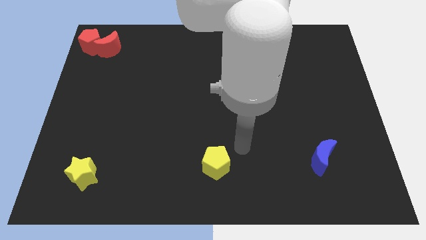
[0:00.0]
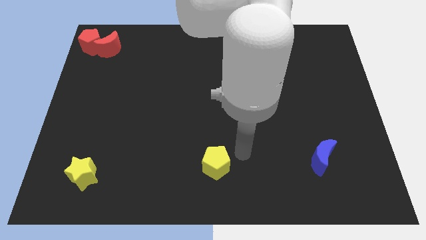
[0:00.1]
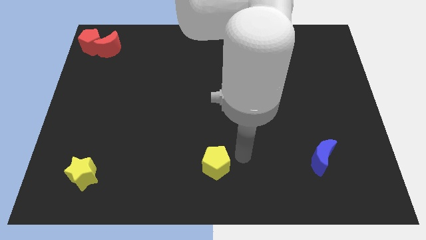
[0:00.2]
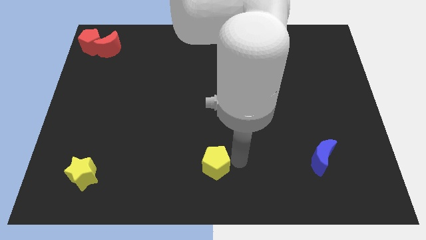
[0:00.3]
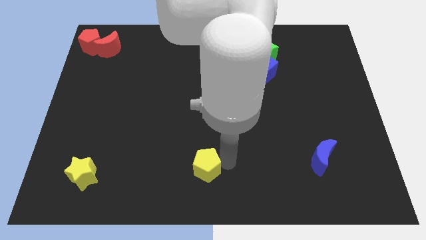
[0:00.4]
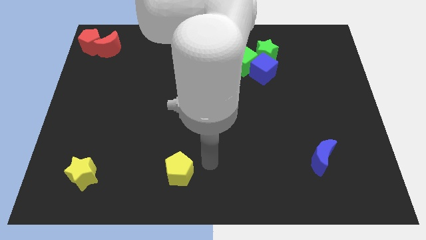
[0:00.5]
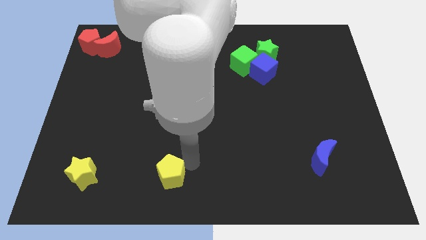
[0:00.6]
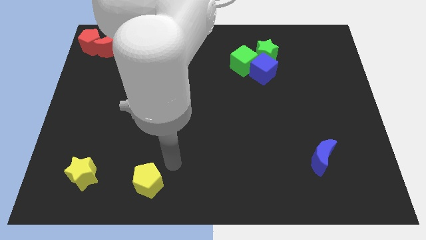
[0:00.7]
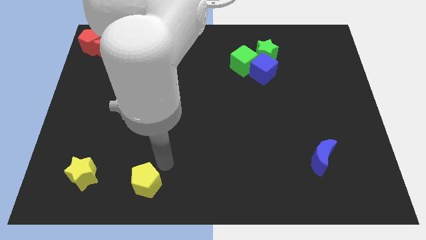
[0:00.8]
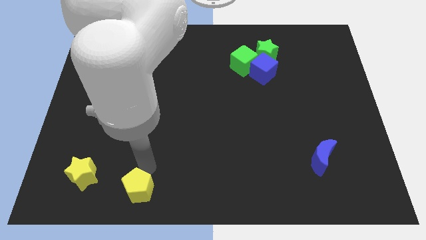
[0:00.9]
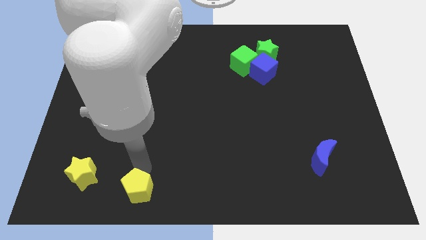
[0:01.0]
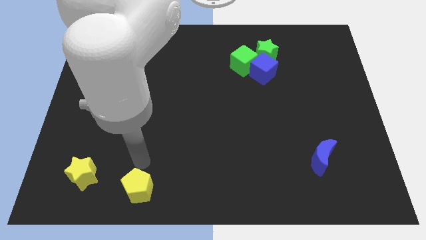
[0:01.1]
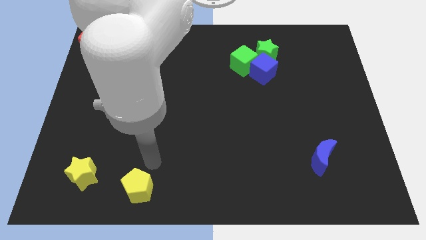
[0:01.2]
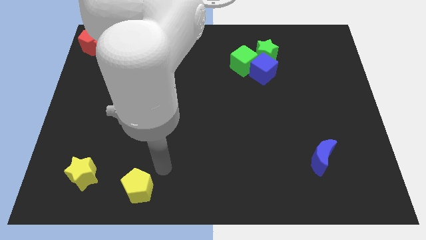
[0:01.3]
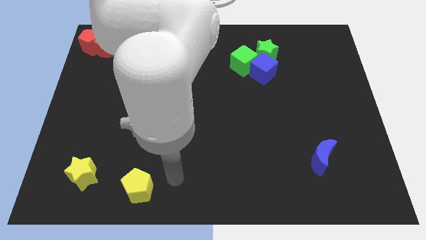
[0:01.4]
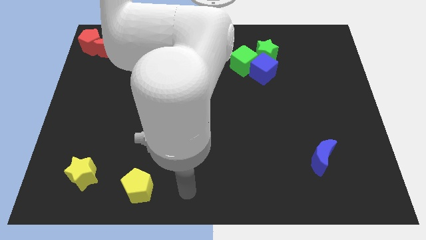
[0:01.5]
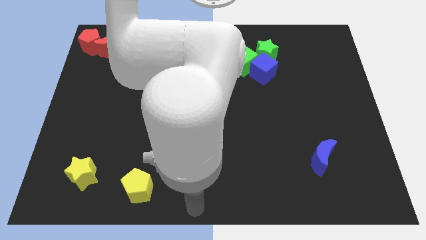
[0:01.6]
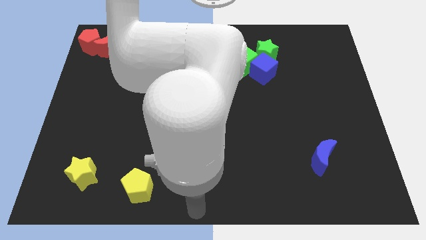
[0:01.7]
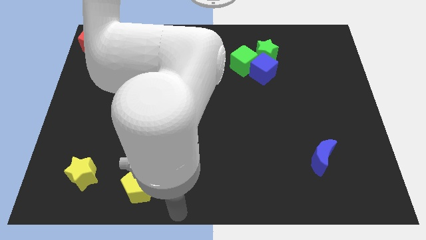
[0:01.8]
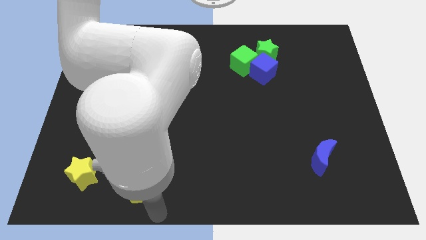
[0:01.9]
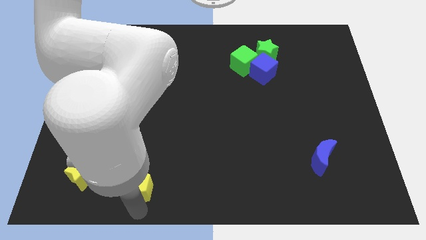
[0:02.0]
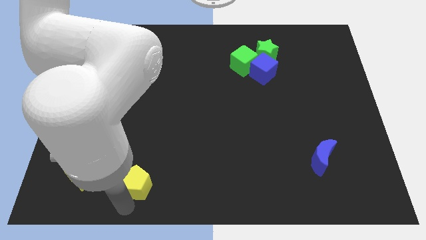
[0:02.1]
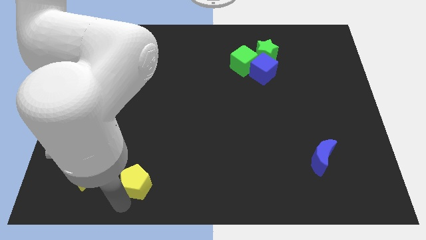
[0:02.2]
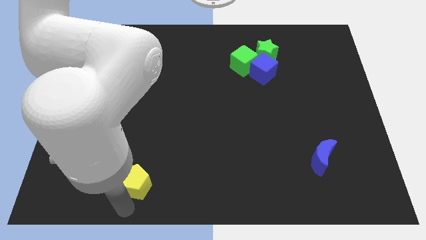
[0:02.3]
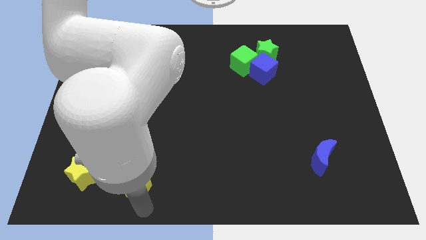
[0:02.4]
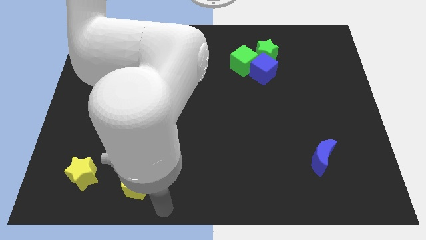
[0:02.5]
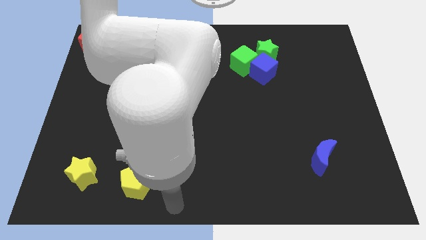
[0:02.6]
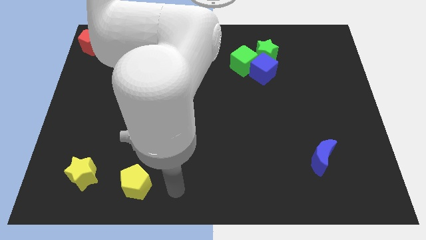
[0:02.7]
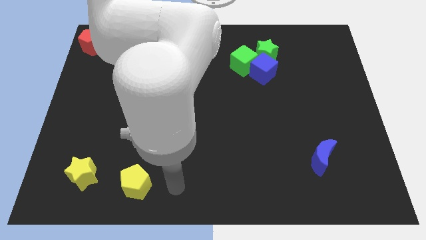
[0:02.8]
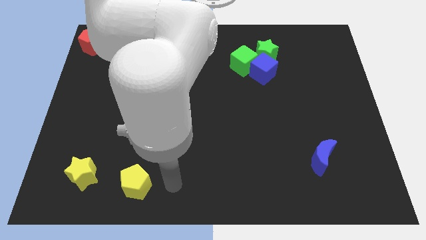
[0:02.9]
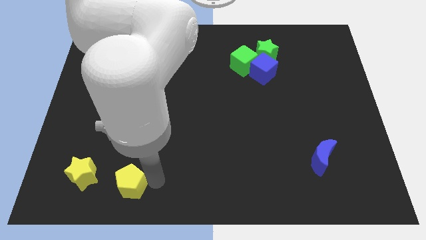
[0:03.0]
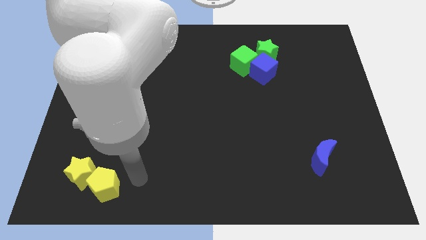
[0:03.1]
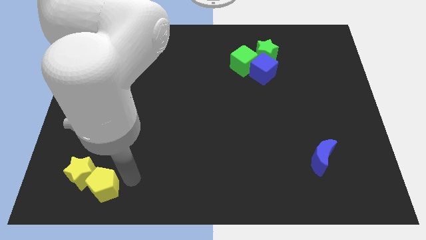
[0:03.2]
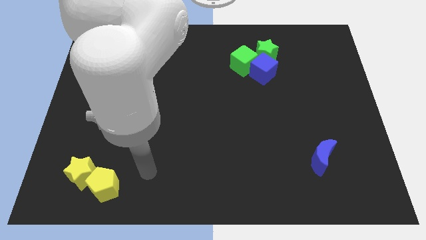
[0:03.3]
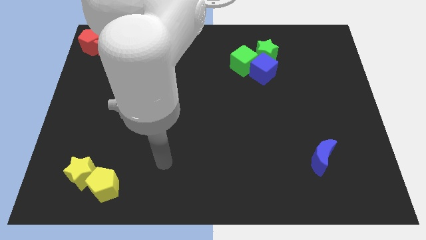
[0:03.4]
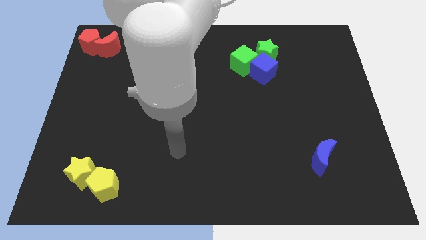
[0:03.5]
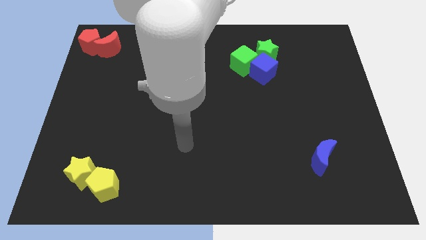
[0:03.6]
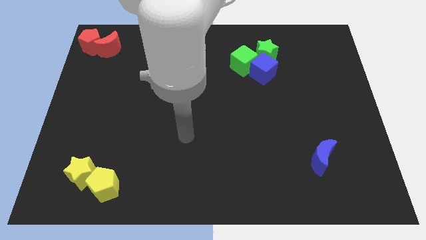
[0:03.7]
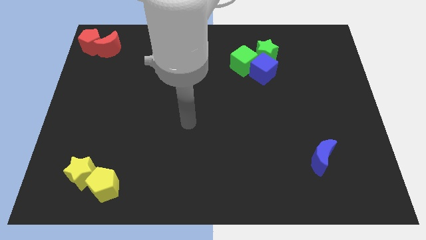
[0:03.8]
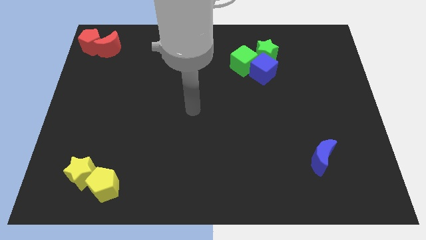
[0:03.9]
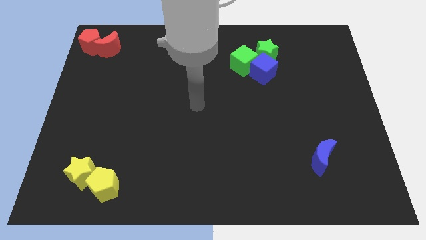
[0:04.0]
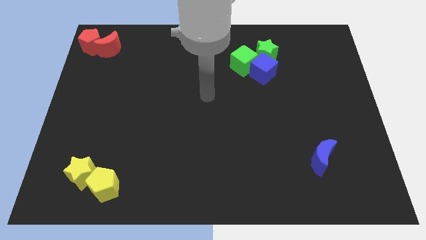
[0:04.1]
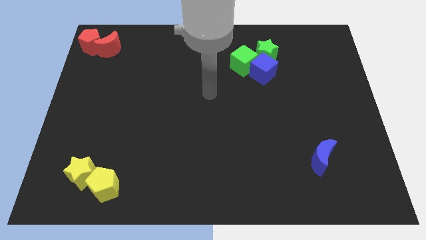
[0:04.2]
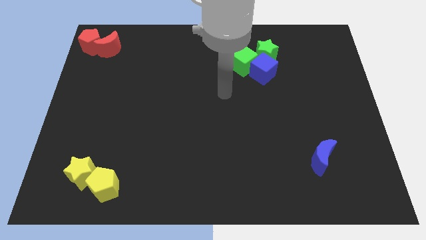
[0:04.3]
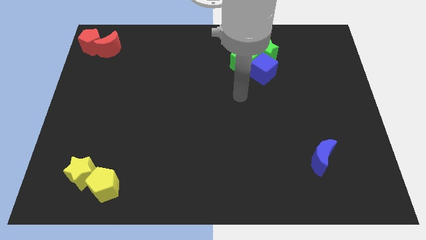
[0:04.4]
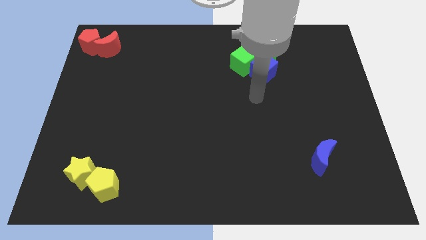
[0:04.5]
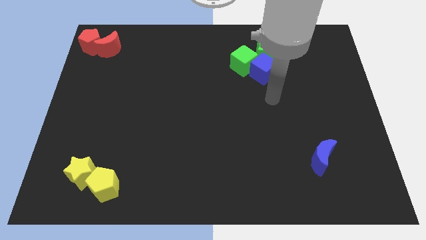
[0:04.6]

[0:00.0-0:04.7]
move the yellow pentagon into the yellow star

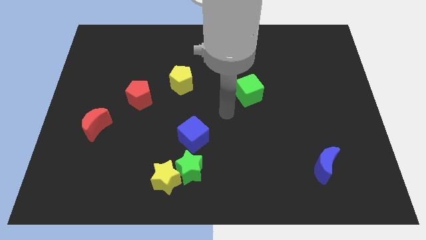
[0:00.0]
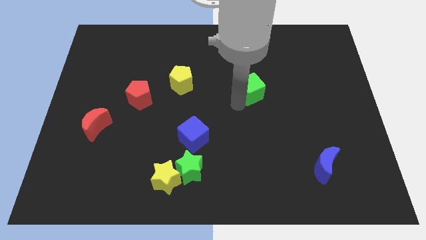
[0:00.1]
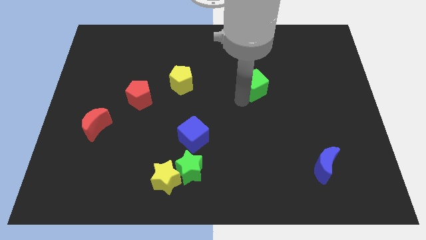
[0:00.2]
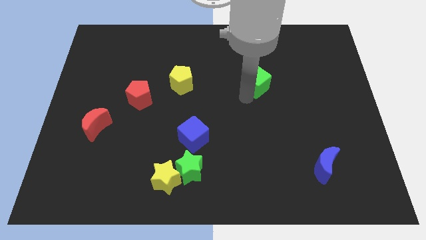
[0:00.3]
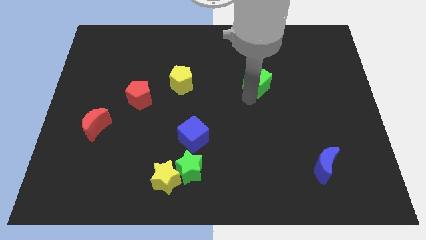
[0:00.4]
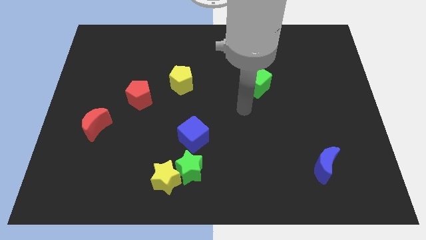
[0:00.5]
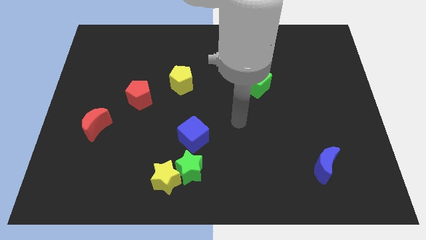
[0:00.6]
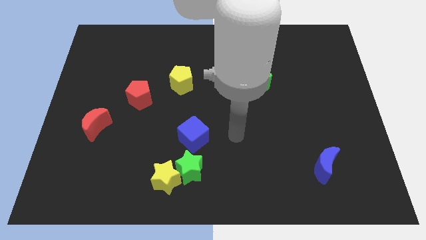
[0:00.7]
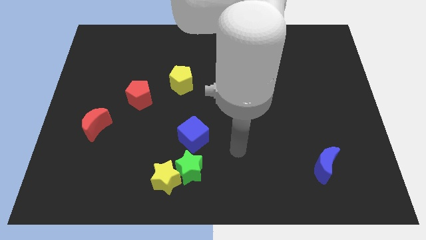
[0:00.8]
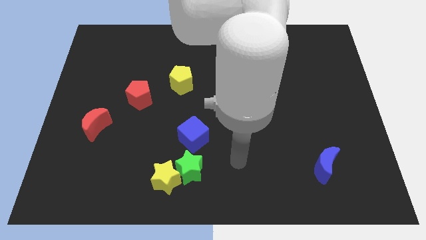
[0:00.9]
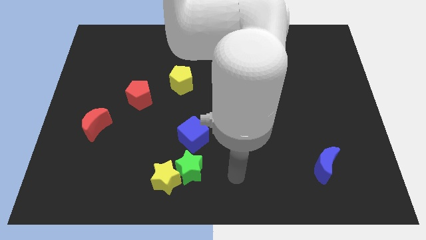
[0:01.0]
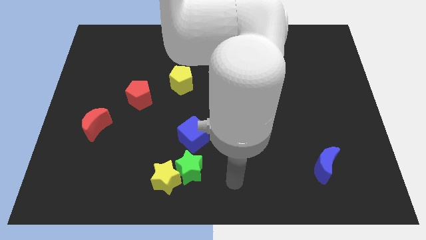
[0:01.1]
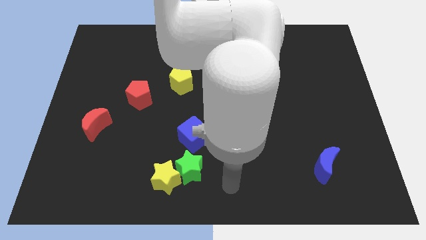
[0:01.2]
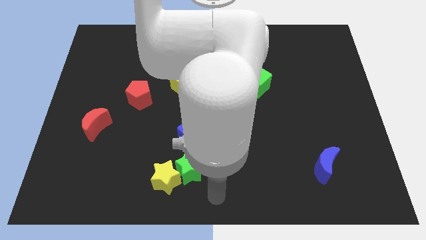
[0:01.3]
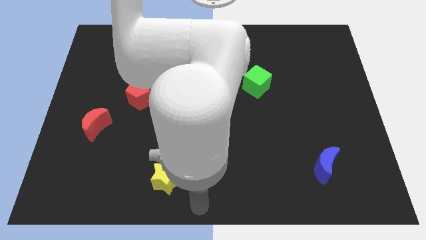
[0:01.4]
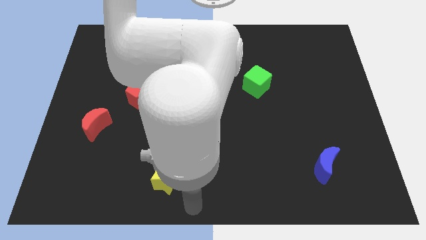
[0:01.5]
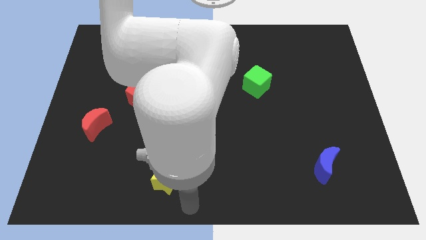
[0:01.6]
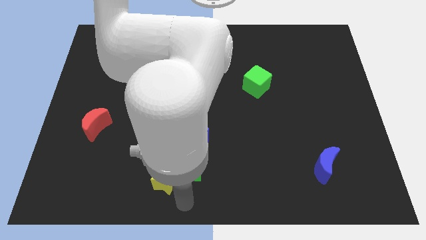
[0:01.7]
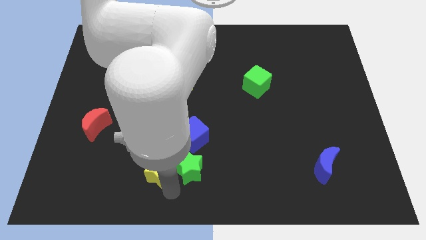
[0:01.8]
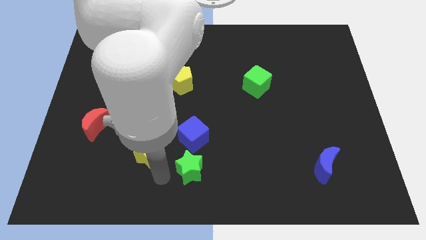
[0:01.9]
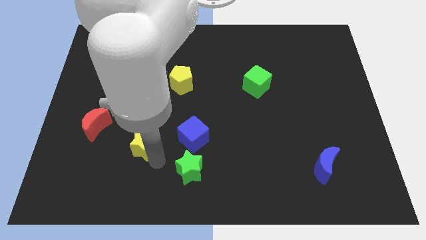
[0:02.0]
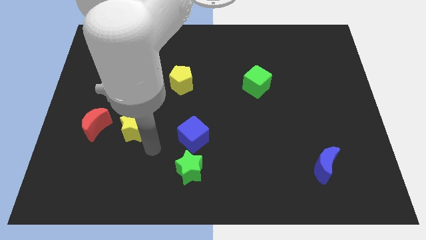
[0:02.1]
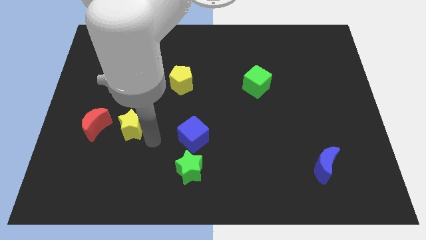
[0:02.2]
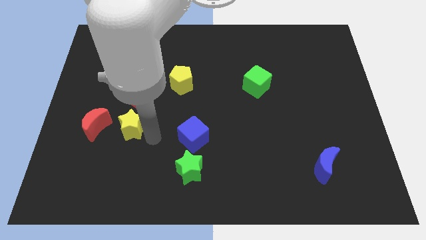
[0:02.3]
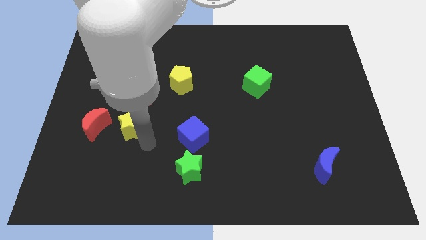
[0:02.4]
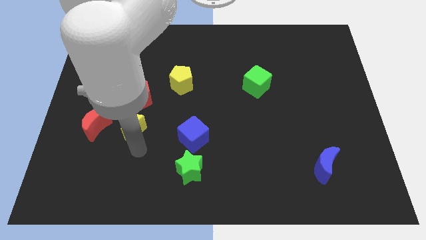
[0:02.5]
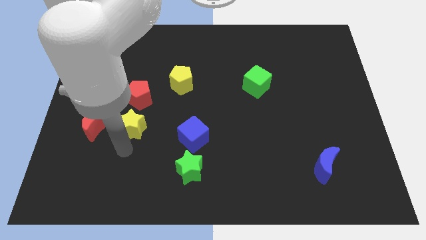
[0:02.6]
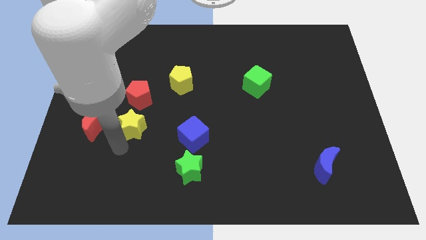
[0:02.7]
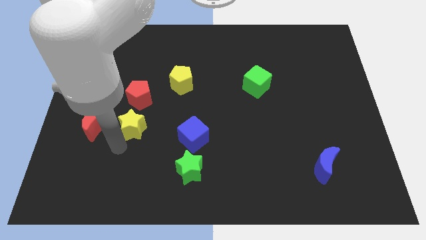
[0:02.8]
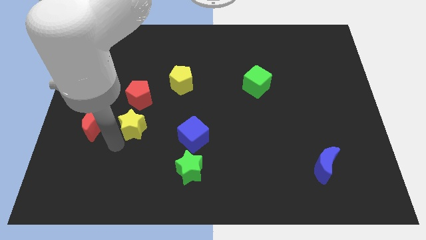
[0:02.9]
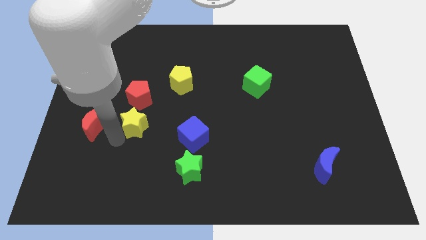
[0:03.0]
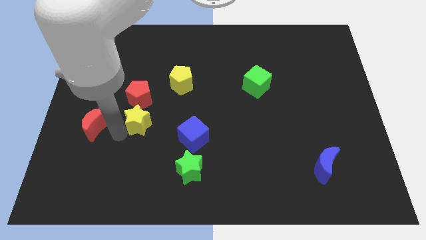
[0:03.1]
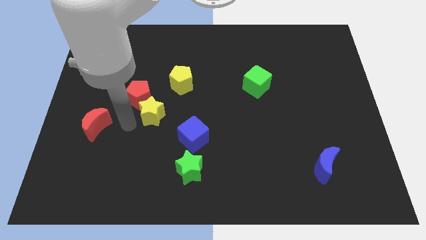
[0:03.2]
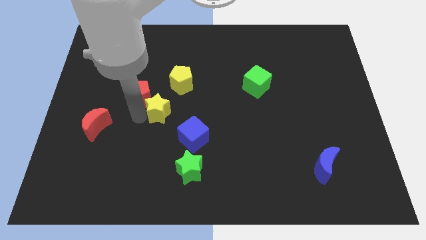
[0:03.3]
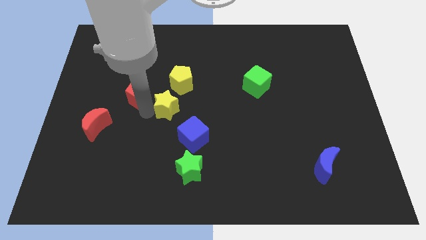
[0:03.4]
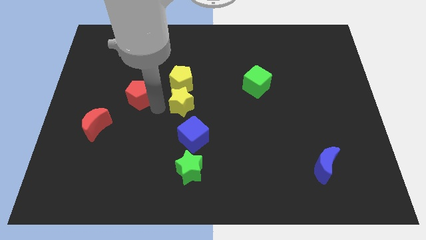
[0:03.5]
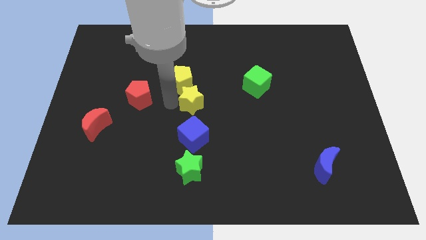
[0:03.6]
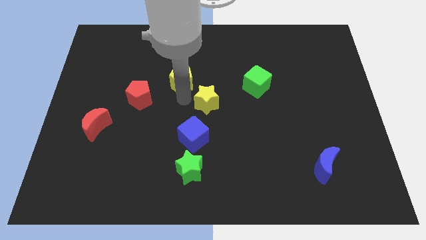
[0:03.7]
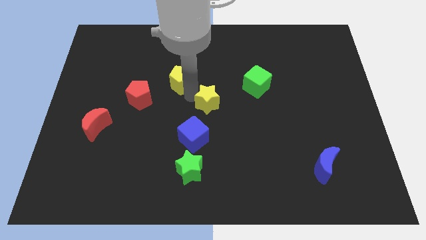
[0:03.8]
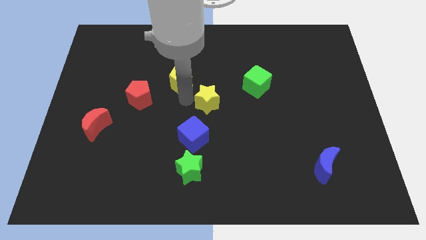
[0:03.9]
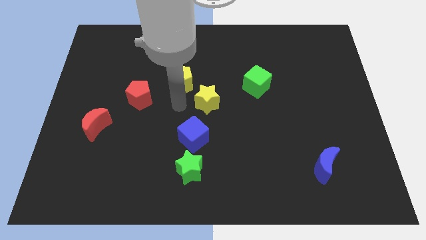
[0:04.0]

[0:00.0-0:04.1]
place yellow star towards the center of the board

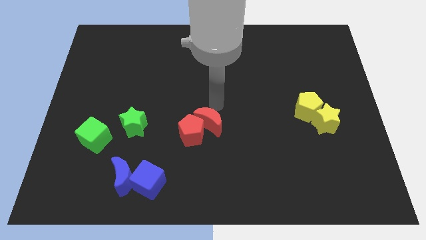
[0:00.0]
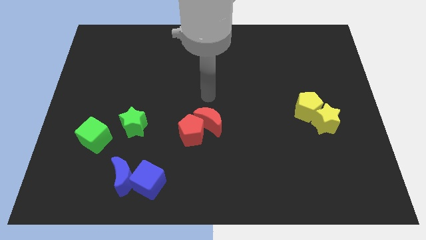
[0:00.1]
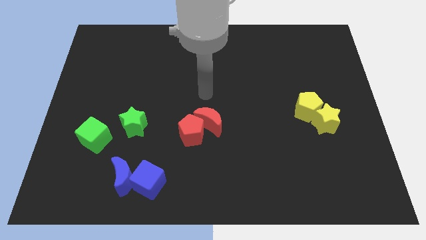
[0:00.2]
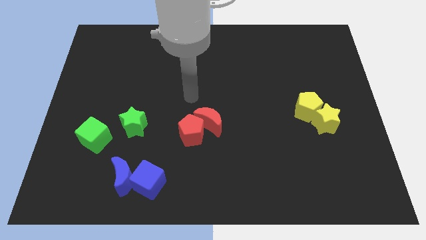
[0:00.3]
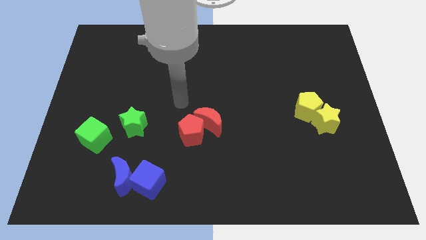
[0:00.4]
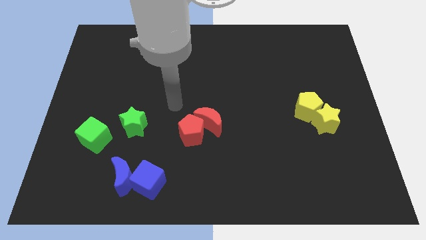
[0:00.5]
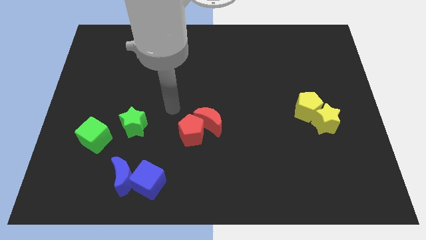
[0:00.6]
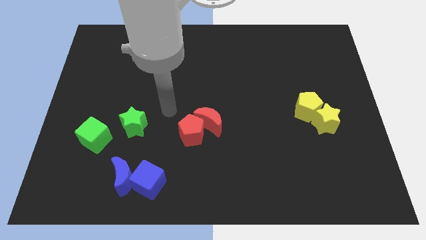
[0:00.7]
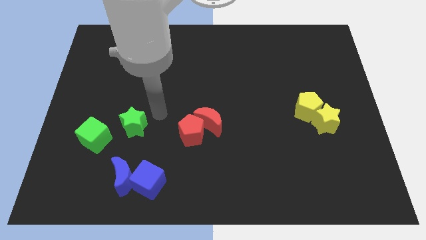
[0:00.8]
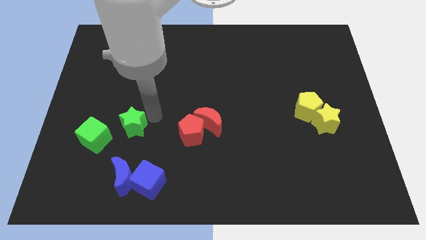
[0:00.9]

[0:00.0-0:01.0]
place your arm to the right of the green star
